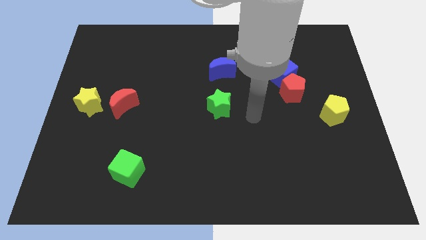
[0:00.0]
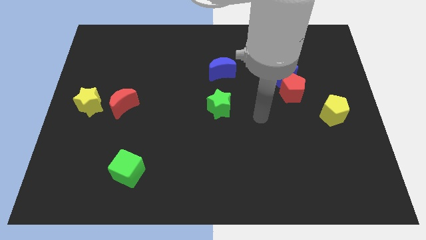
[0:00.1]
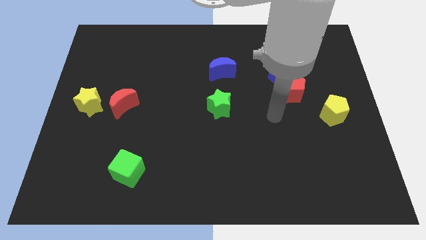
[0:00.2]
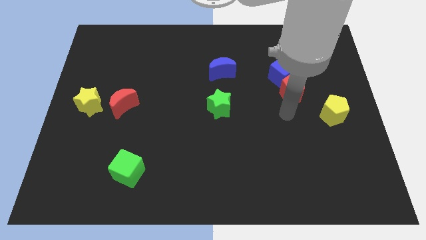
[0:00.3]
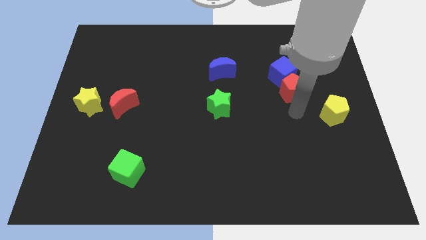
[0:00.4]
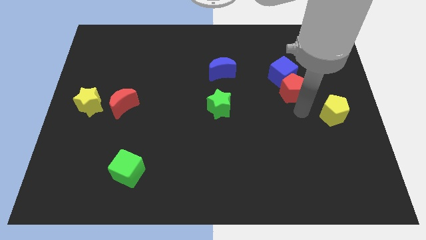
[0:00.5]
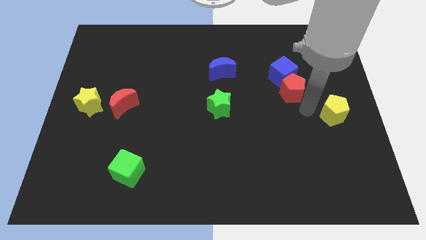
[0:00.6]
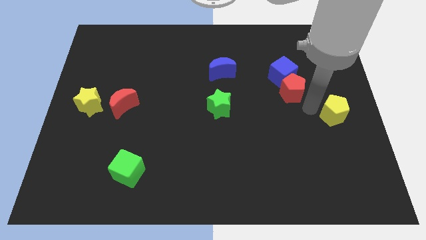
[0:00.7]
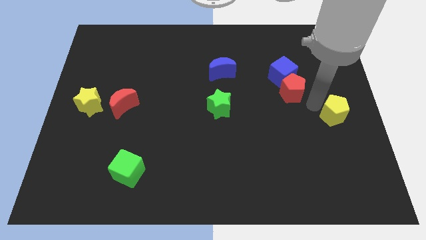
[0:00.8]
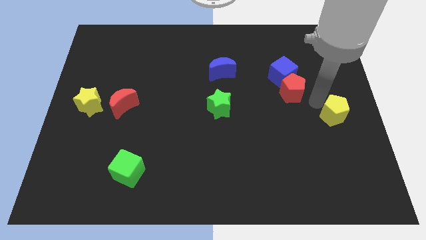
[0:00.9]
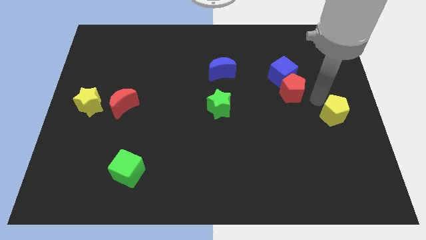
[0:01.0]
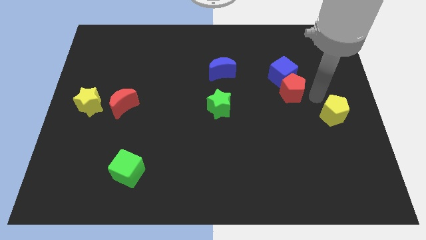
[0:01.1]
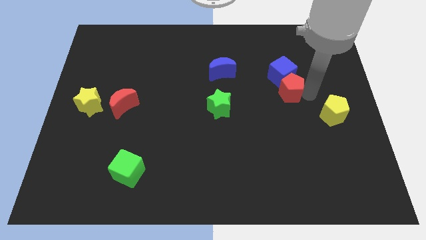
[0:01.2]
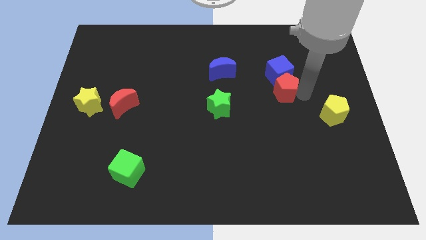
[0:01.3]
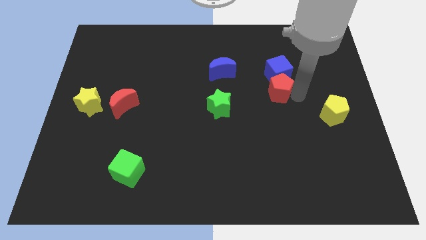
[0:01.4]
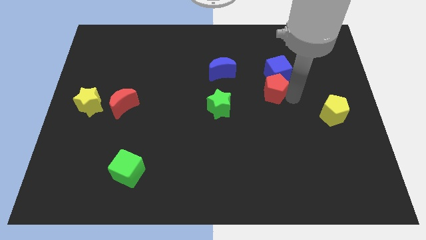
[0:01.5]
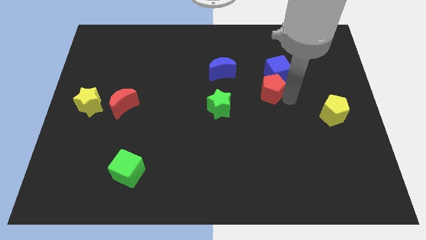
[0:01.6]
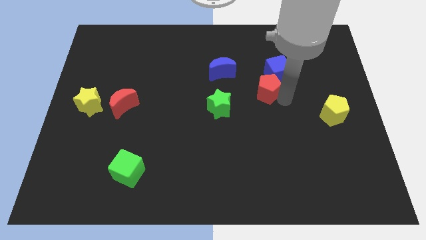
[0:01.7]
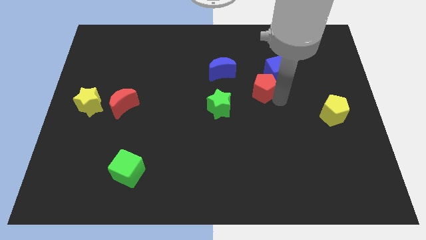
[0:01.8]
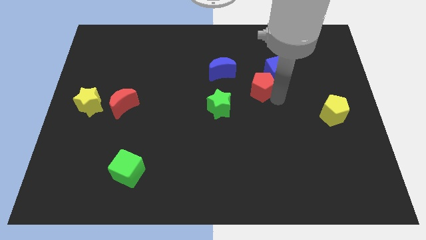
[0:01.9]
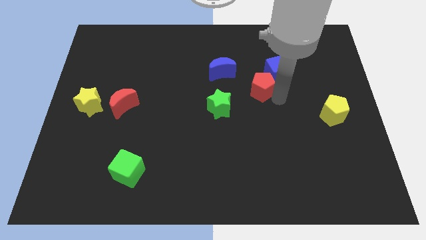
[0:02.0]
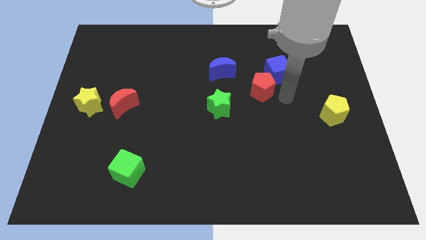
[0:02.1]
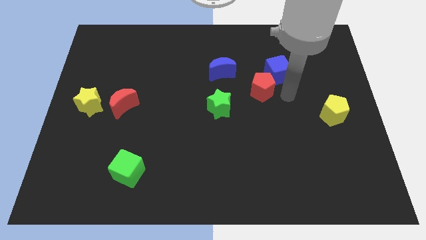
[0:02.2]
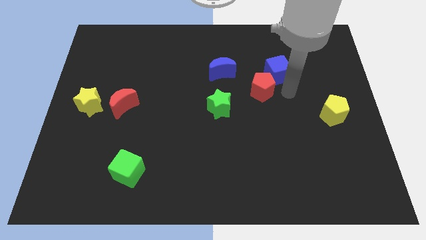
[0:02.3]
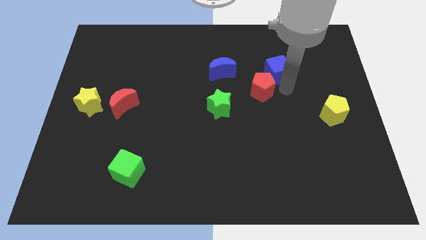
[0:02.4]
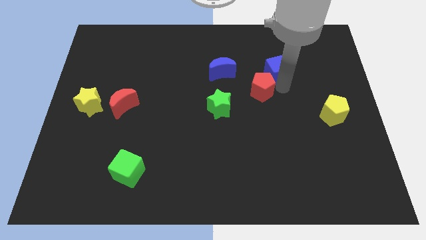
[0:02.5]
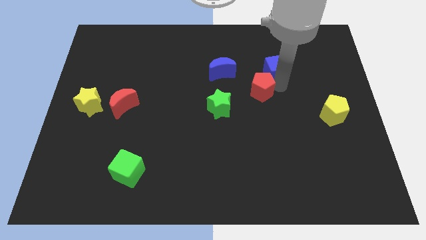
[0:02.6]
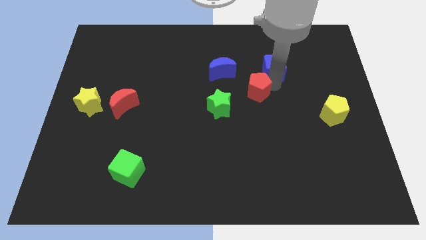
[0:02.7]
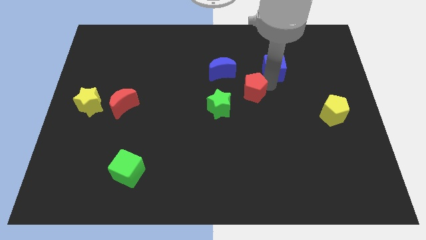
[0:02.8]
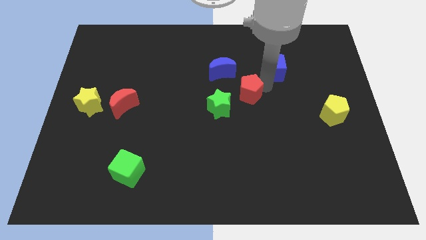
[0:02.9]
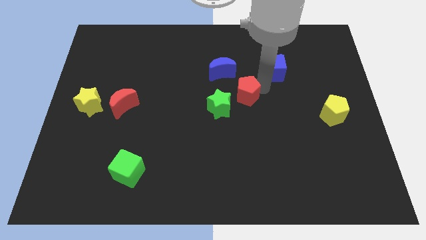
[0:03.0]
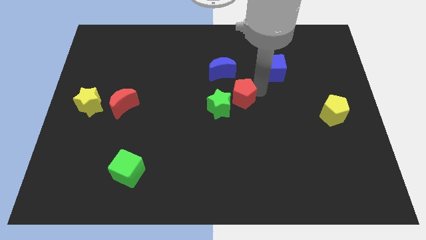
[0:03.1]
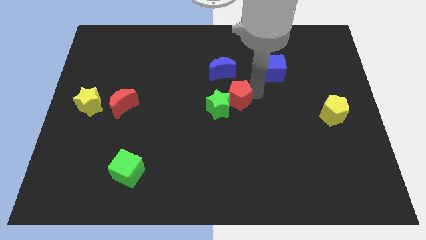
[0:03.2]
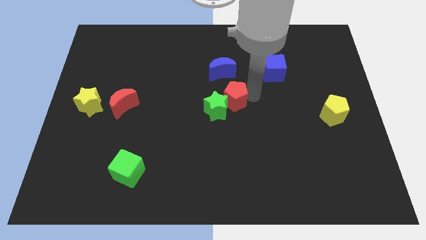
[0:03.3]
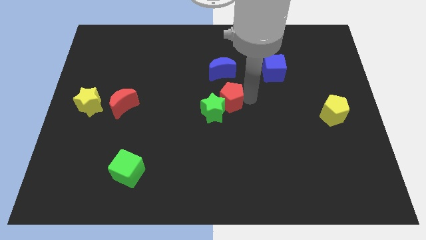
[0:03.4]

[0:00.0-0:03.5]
move the red pentagon close to the green star

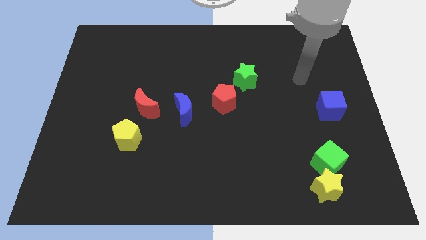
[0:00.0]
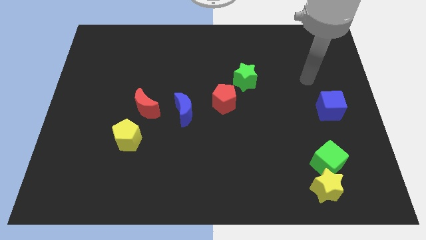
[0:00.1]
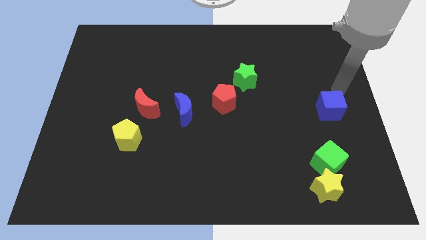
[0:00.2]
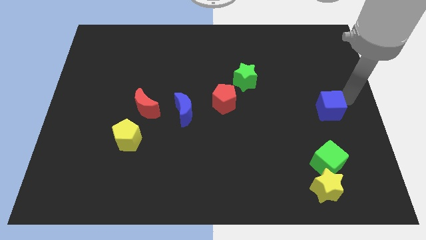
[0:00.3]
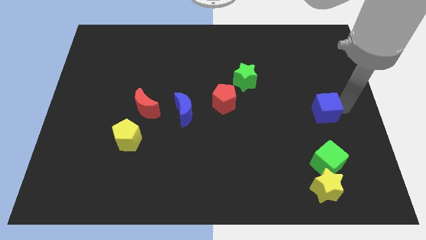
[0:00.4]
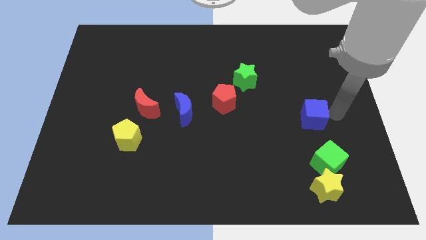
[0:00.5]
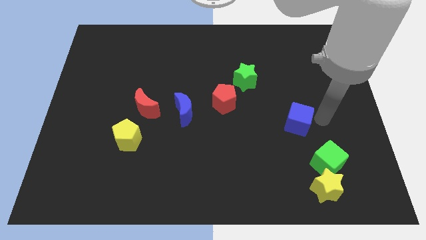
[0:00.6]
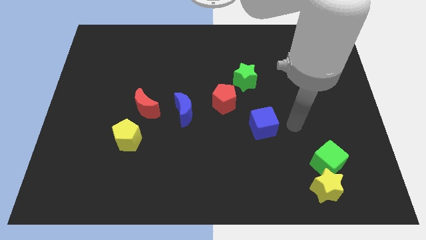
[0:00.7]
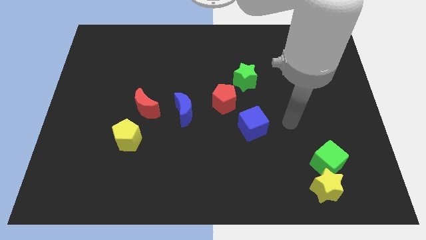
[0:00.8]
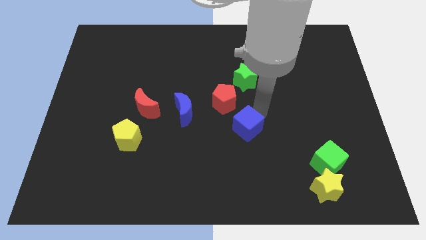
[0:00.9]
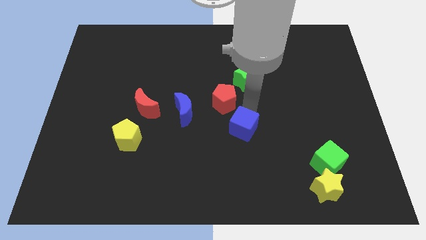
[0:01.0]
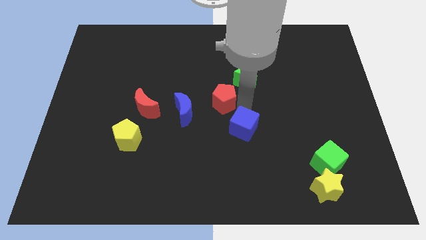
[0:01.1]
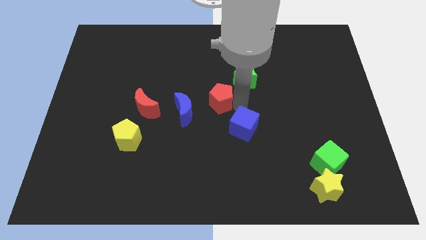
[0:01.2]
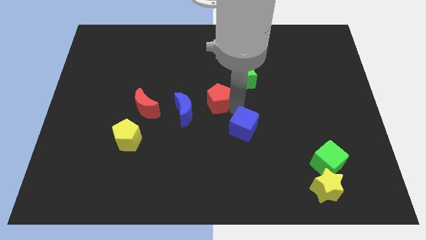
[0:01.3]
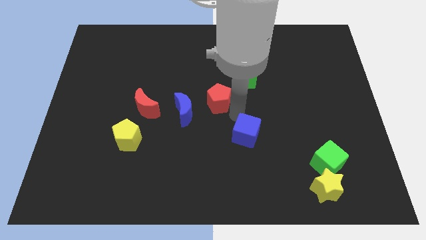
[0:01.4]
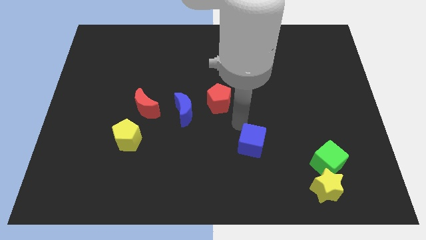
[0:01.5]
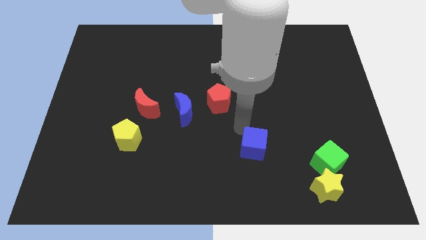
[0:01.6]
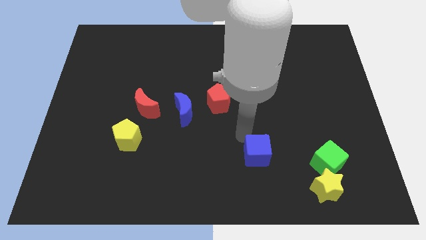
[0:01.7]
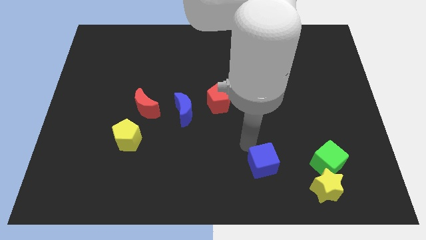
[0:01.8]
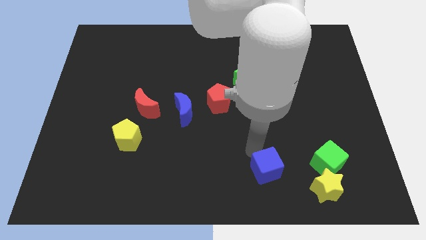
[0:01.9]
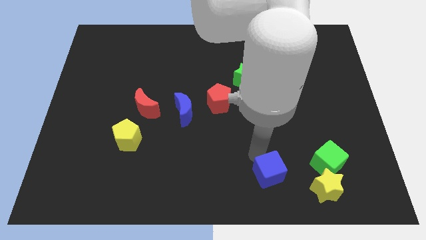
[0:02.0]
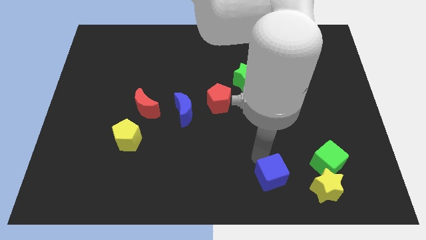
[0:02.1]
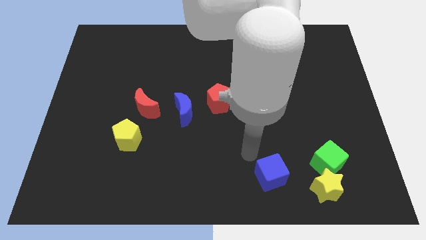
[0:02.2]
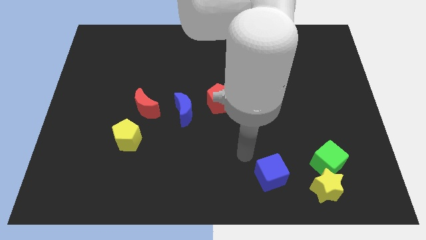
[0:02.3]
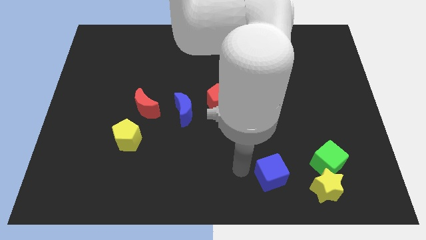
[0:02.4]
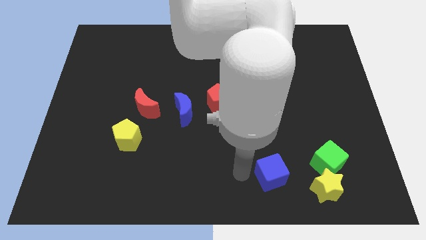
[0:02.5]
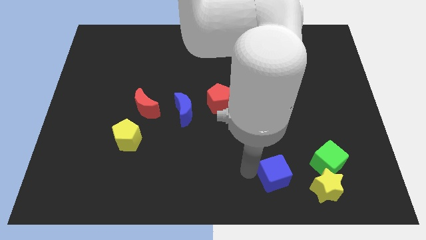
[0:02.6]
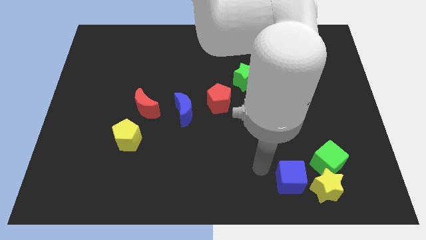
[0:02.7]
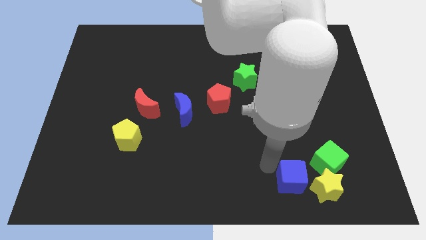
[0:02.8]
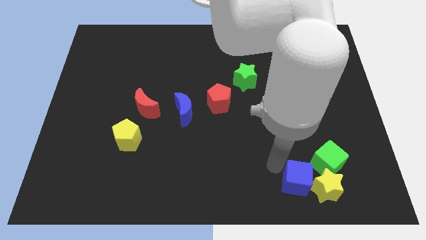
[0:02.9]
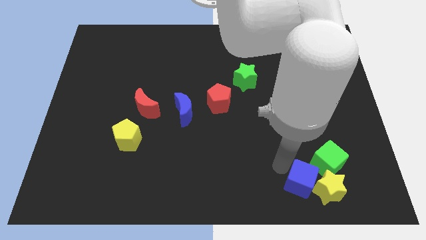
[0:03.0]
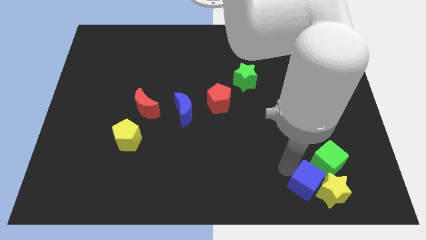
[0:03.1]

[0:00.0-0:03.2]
move the blue cube to the yellow star

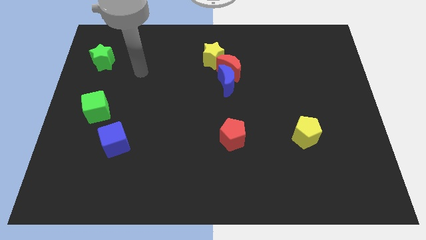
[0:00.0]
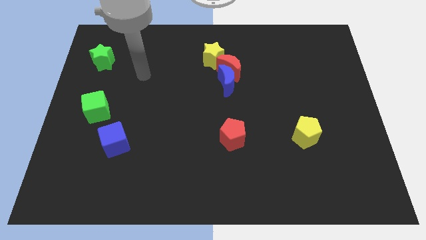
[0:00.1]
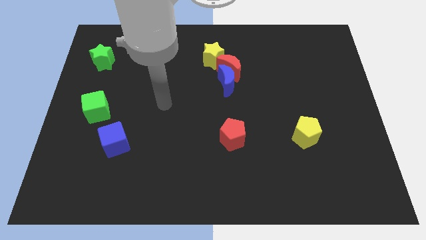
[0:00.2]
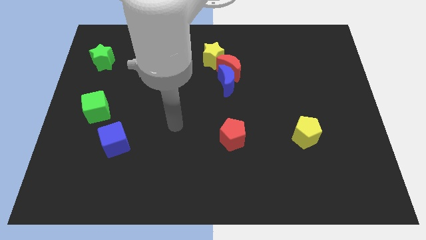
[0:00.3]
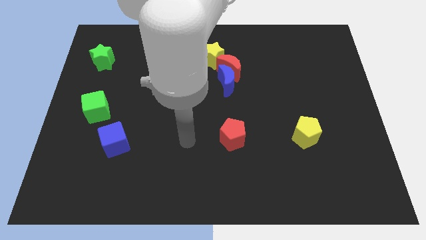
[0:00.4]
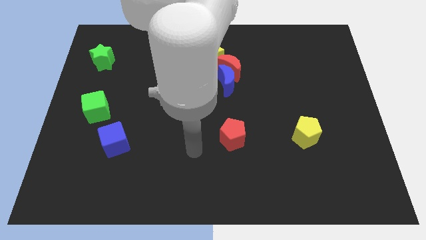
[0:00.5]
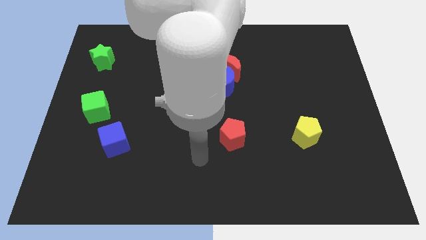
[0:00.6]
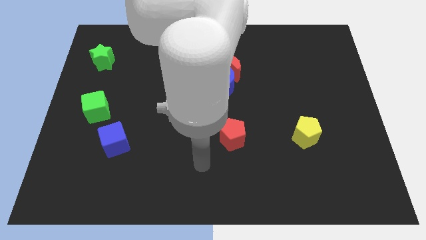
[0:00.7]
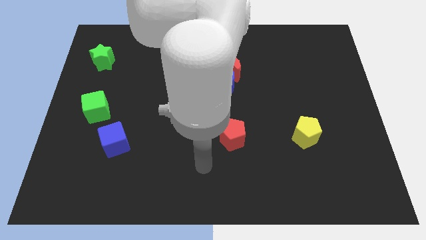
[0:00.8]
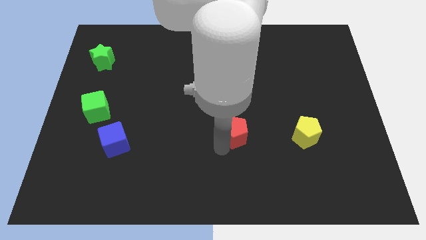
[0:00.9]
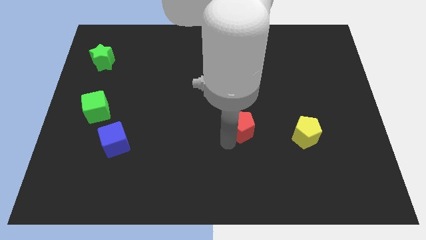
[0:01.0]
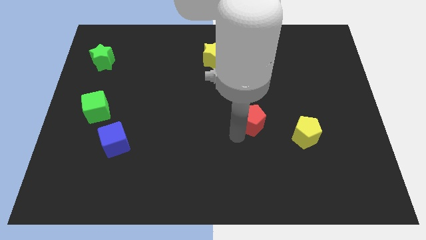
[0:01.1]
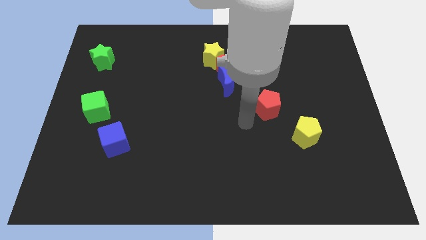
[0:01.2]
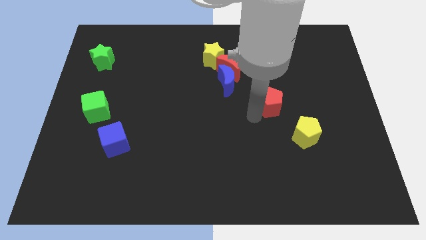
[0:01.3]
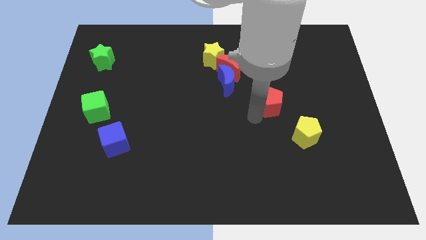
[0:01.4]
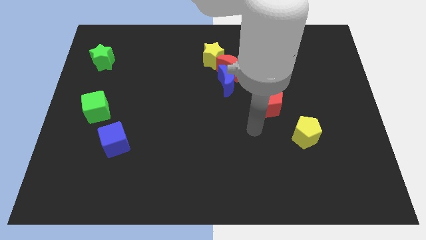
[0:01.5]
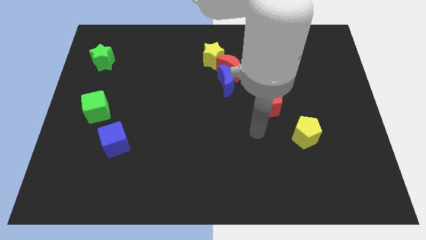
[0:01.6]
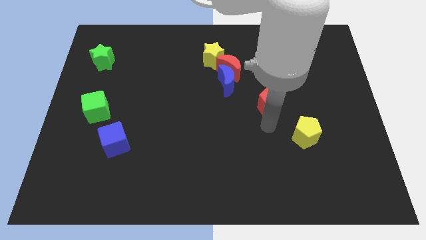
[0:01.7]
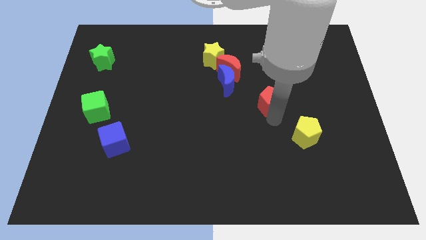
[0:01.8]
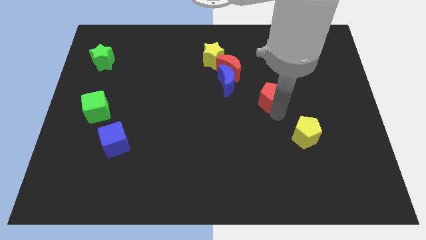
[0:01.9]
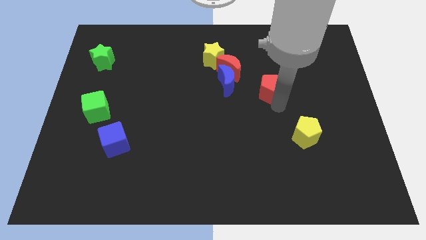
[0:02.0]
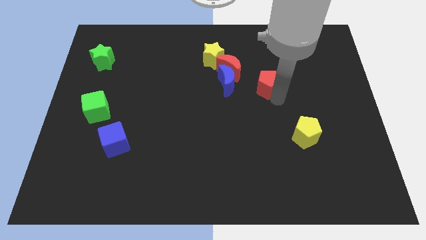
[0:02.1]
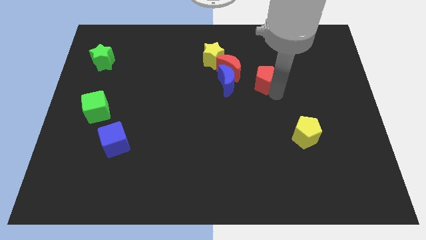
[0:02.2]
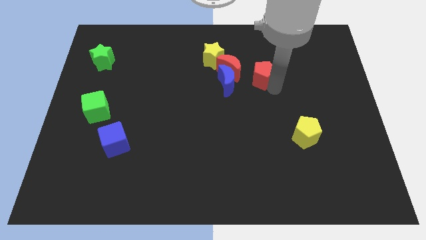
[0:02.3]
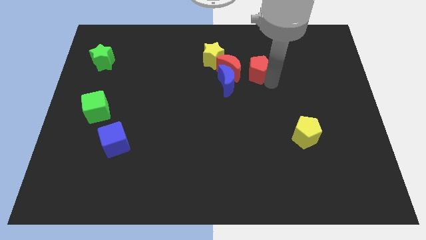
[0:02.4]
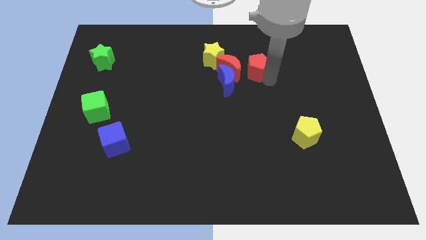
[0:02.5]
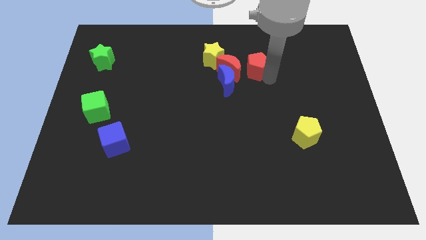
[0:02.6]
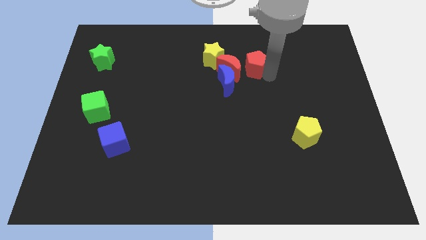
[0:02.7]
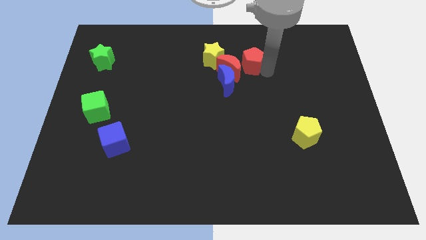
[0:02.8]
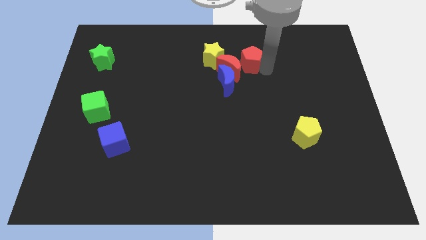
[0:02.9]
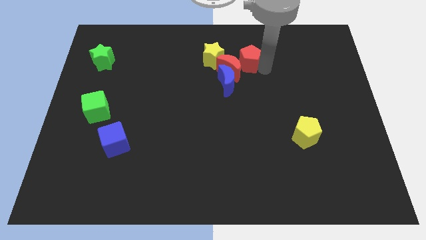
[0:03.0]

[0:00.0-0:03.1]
push the red pentagon close to the red moon
